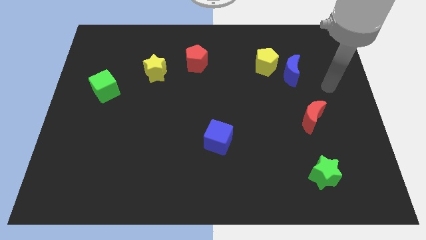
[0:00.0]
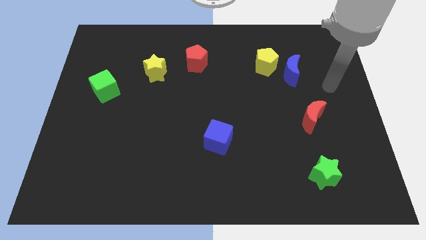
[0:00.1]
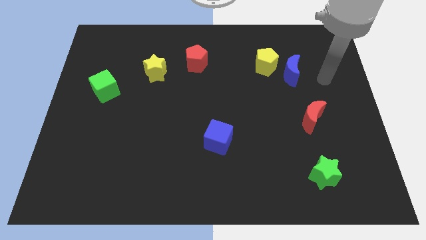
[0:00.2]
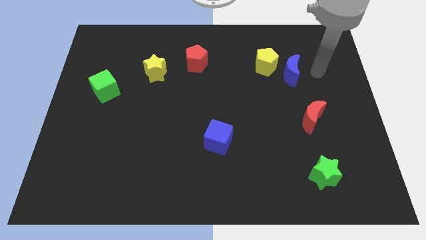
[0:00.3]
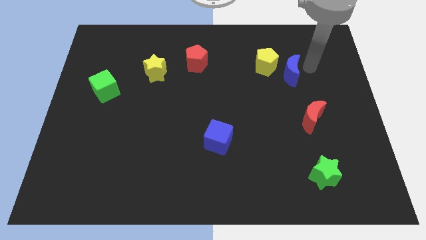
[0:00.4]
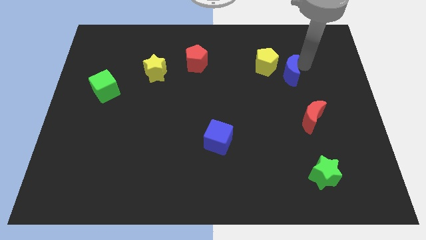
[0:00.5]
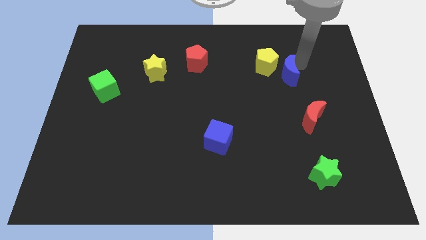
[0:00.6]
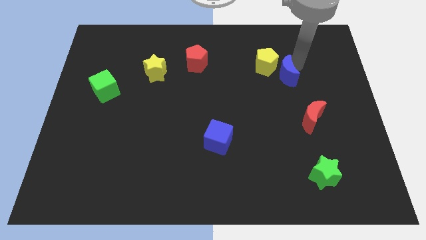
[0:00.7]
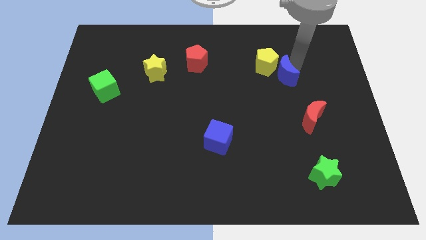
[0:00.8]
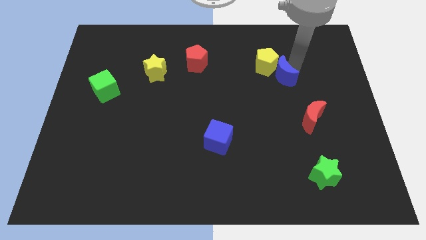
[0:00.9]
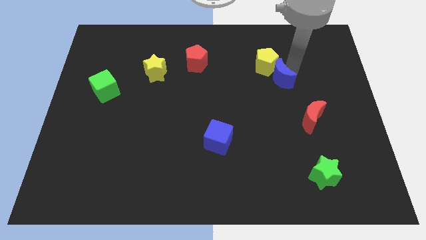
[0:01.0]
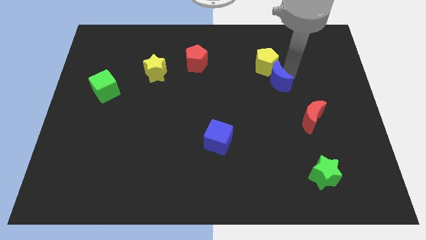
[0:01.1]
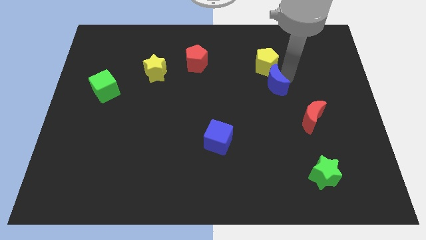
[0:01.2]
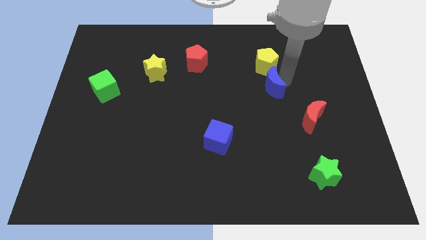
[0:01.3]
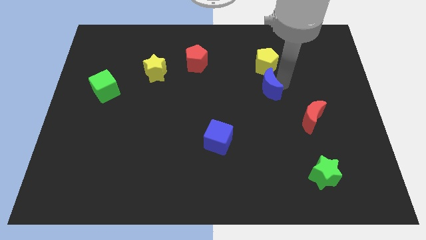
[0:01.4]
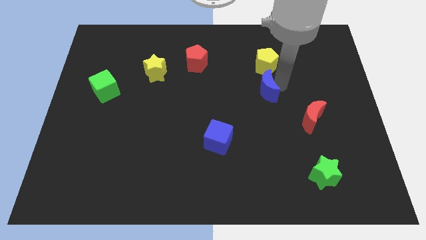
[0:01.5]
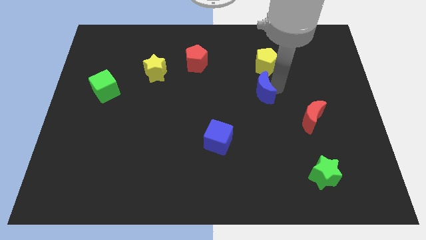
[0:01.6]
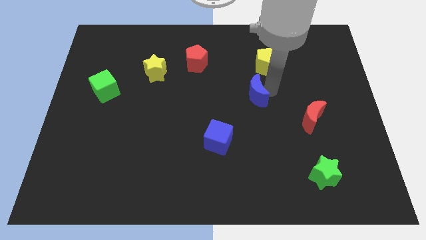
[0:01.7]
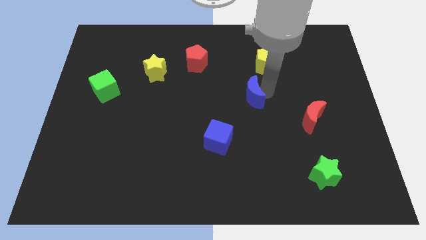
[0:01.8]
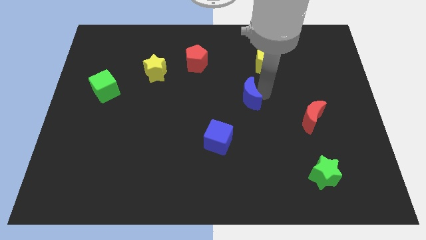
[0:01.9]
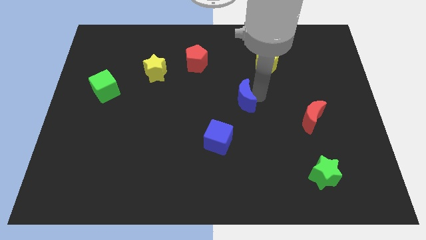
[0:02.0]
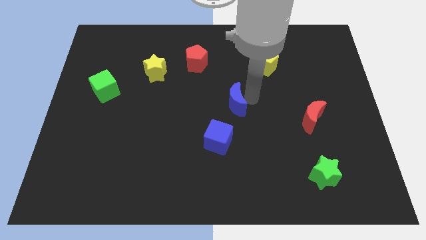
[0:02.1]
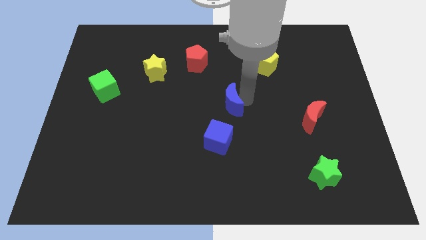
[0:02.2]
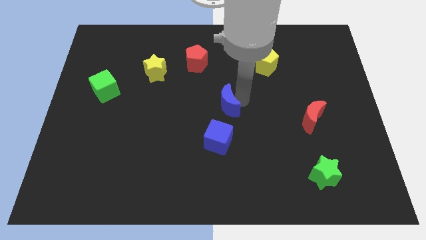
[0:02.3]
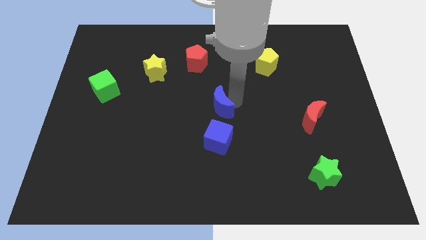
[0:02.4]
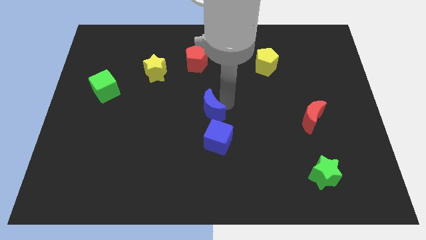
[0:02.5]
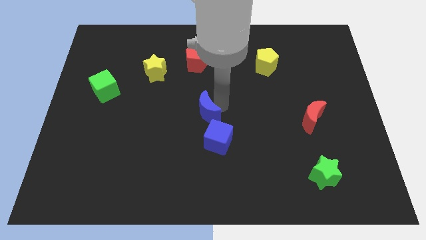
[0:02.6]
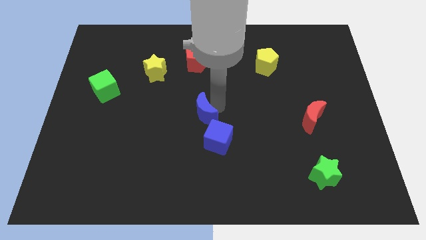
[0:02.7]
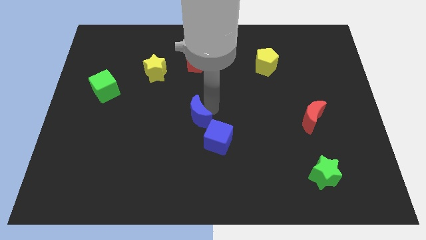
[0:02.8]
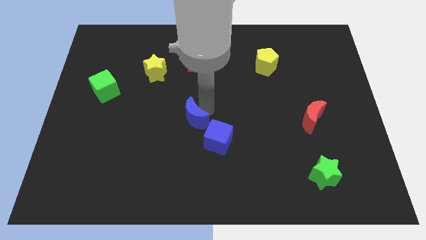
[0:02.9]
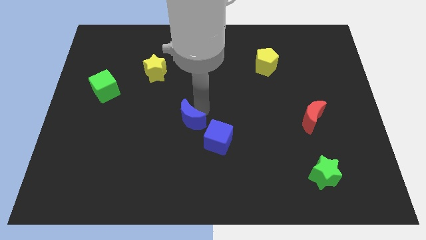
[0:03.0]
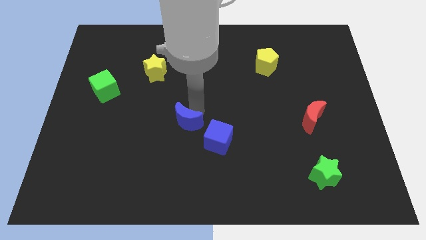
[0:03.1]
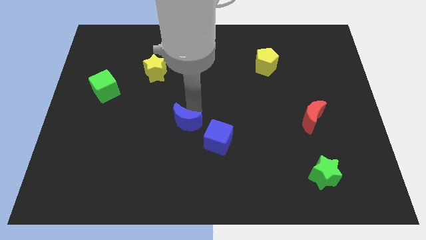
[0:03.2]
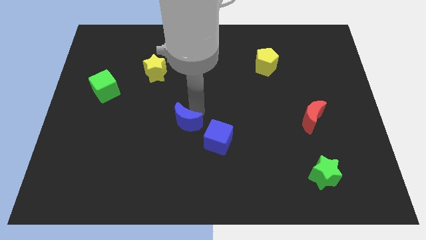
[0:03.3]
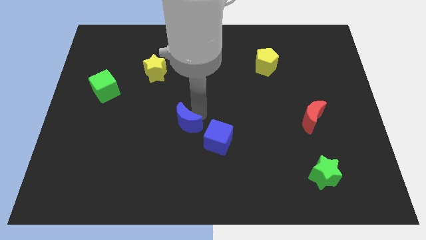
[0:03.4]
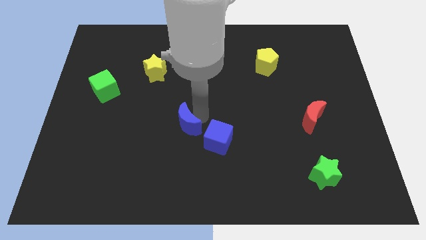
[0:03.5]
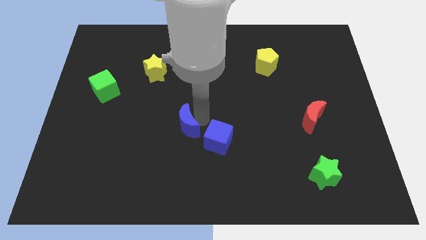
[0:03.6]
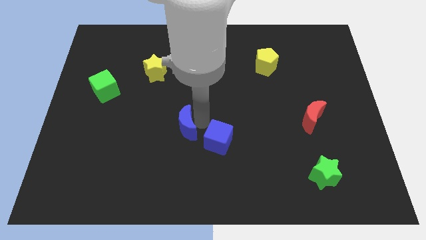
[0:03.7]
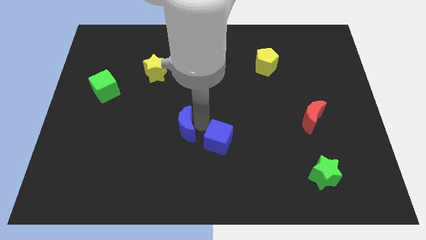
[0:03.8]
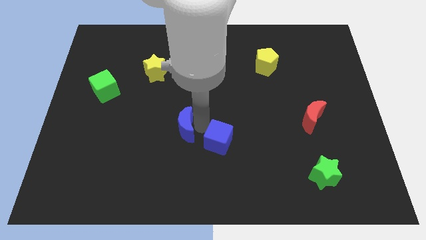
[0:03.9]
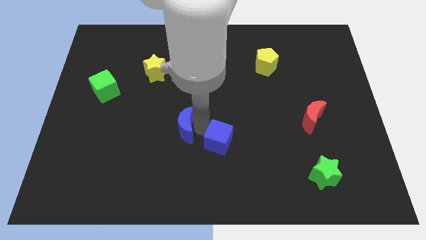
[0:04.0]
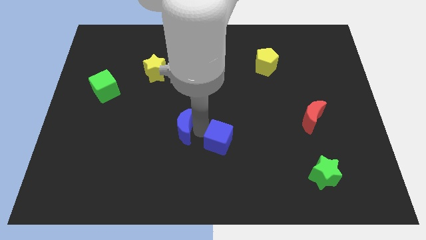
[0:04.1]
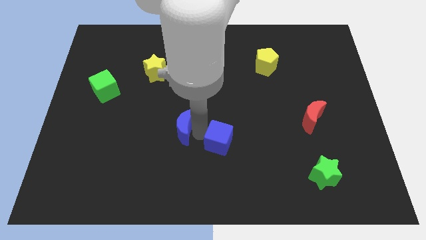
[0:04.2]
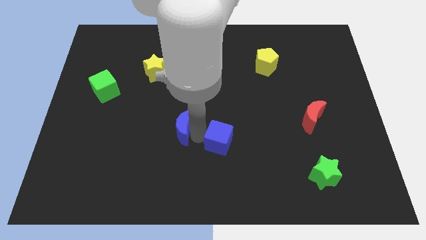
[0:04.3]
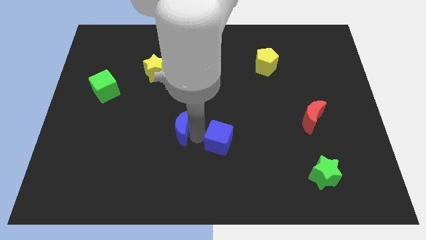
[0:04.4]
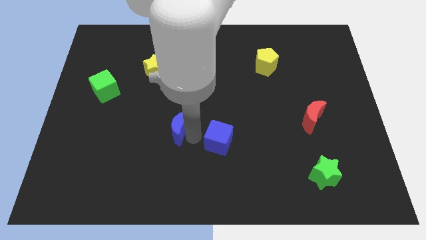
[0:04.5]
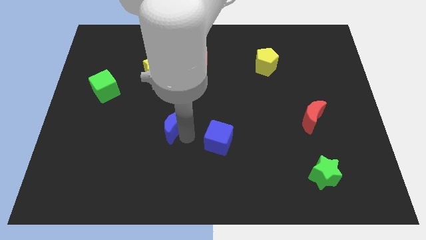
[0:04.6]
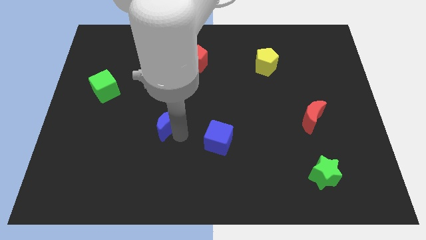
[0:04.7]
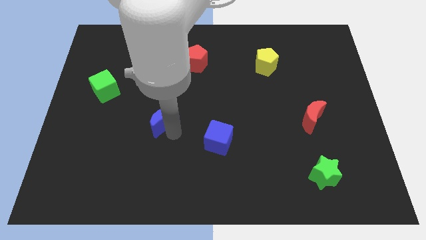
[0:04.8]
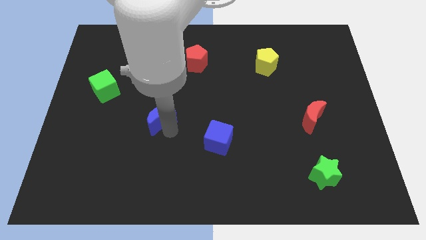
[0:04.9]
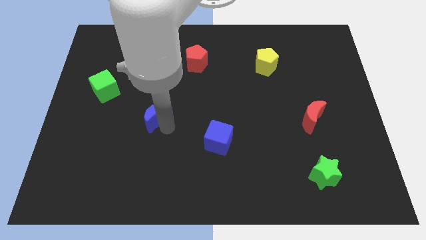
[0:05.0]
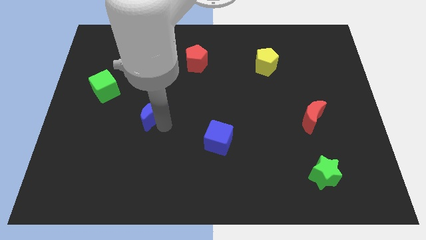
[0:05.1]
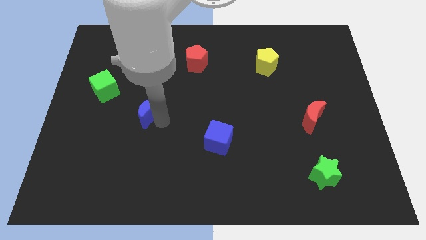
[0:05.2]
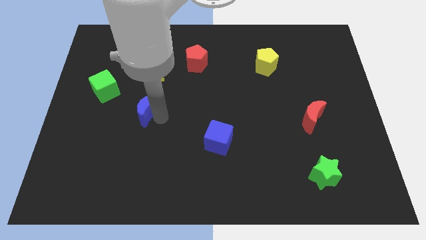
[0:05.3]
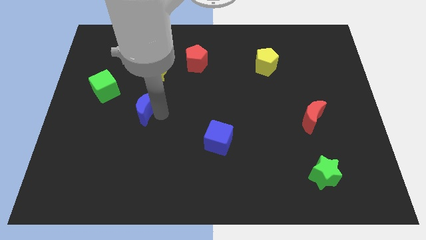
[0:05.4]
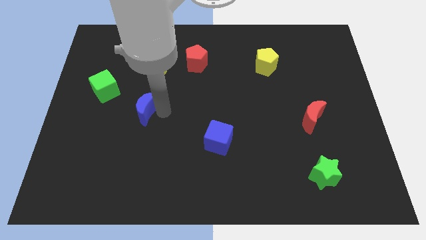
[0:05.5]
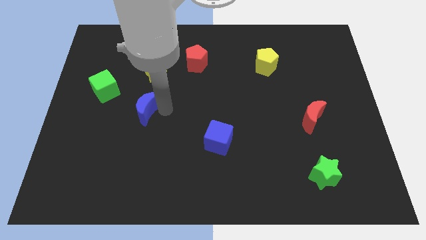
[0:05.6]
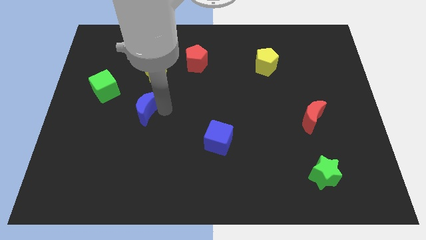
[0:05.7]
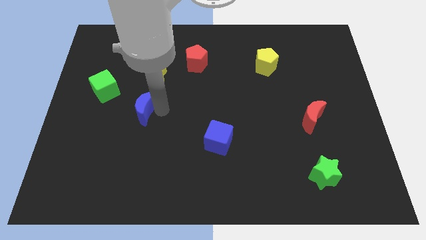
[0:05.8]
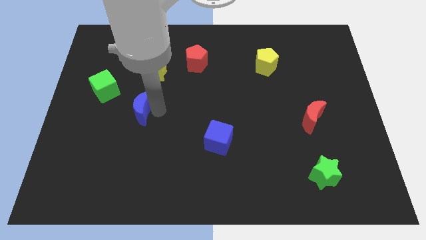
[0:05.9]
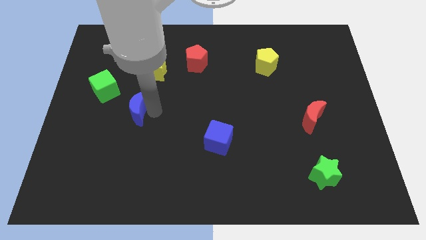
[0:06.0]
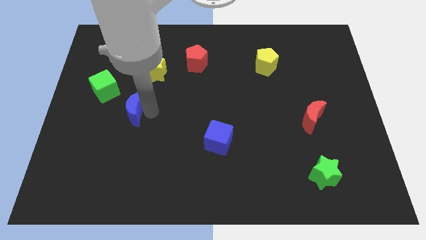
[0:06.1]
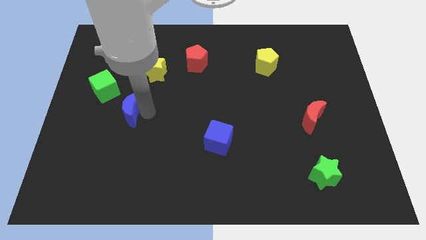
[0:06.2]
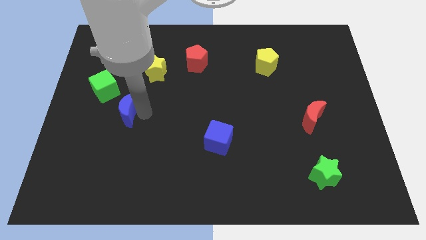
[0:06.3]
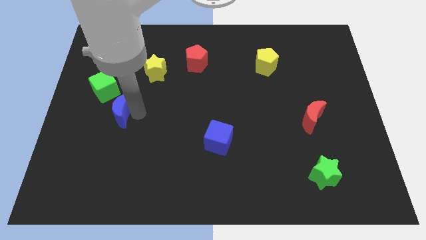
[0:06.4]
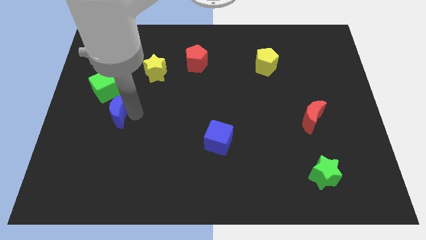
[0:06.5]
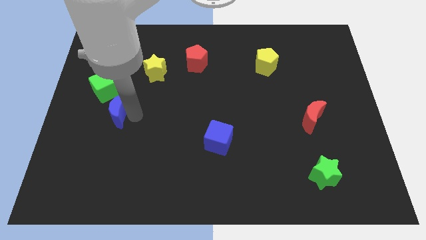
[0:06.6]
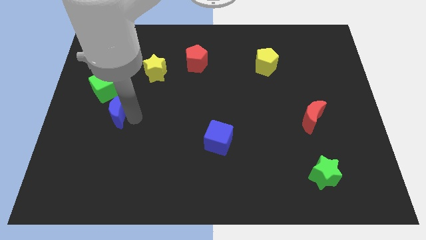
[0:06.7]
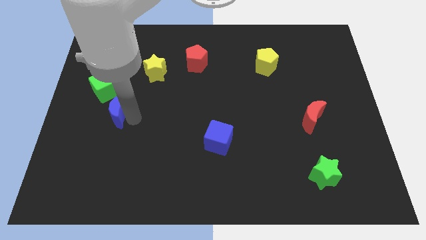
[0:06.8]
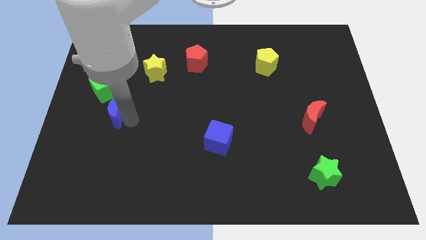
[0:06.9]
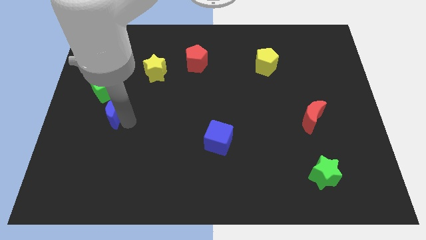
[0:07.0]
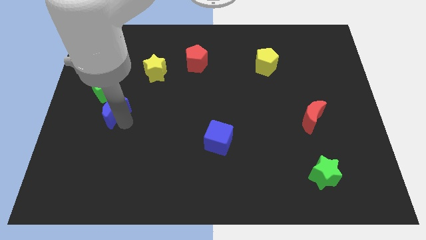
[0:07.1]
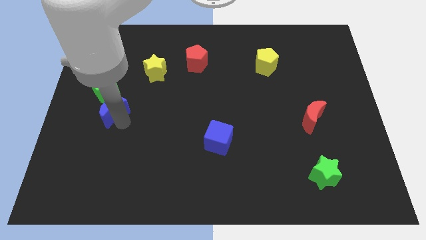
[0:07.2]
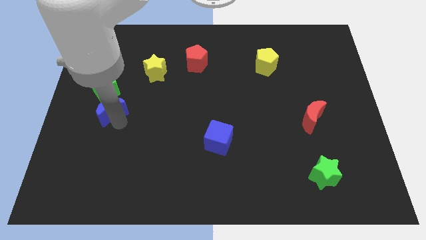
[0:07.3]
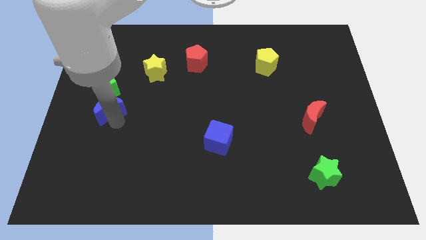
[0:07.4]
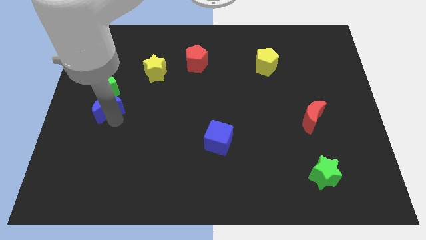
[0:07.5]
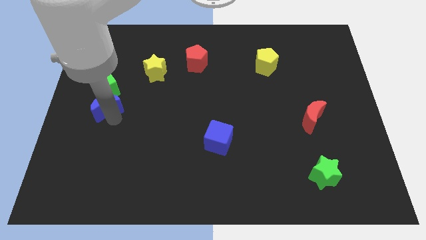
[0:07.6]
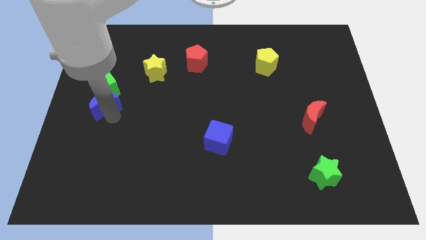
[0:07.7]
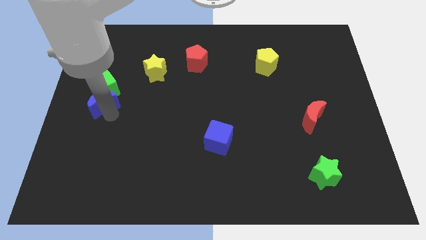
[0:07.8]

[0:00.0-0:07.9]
slide the blue moon towards the green cube

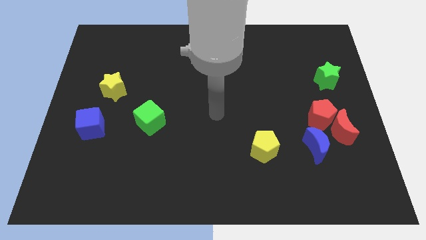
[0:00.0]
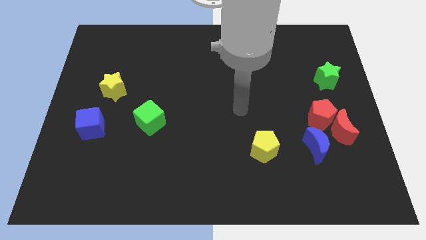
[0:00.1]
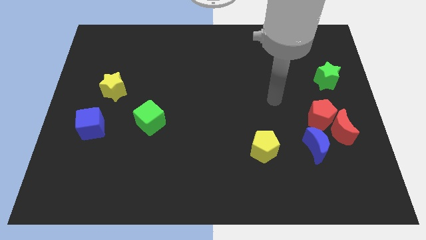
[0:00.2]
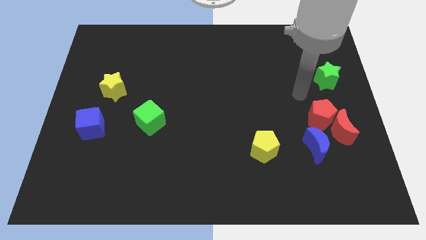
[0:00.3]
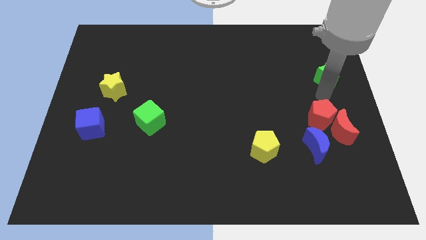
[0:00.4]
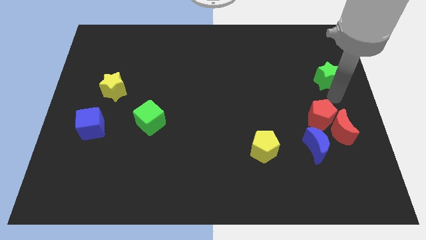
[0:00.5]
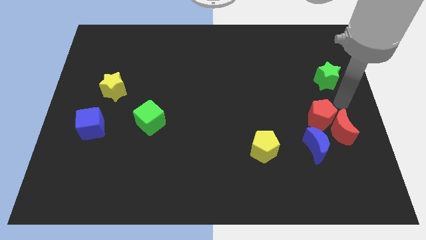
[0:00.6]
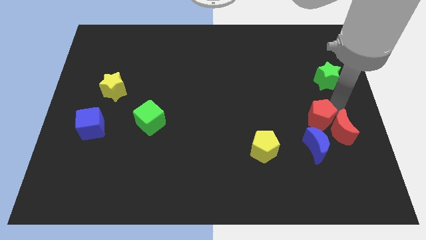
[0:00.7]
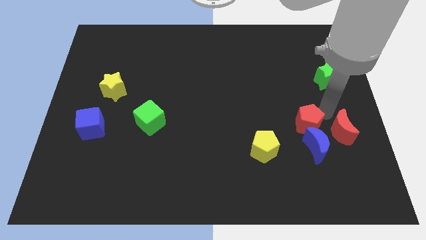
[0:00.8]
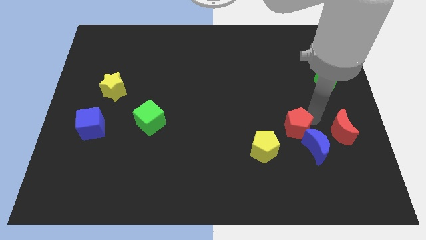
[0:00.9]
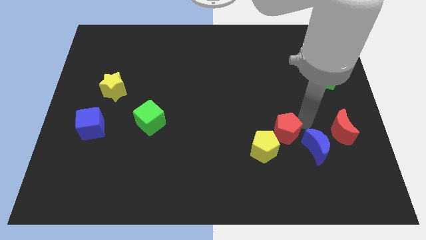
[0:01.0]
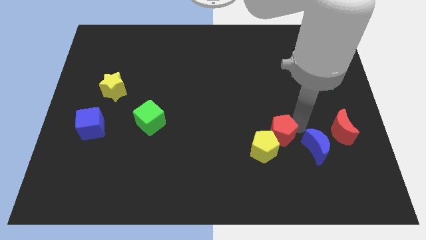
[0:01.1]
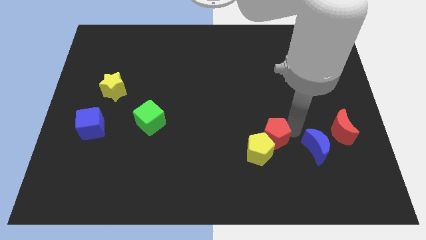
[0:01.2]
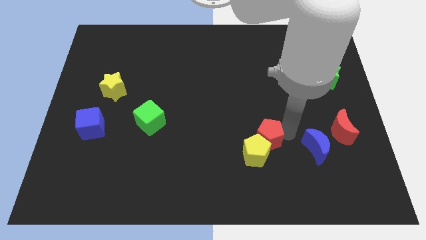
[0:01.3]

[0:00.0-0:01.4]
slide the red pentagon close to the yellow pentagon
